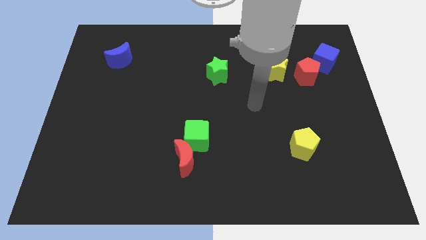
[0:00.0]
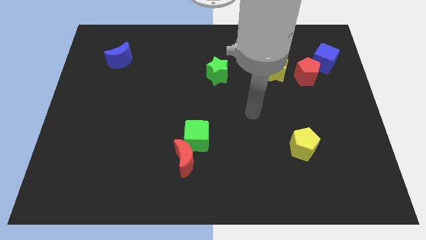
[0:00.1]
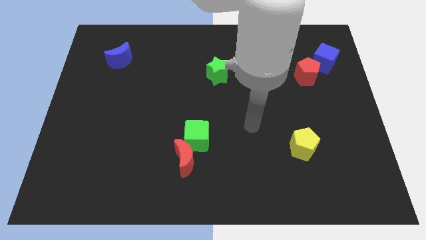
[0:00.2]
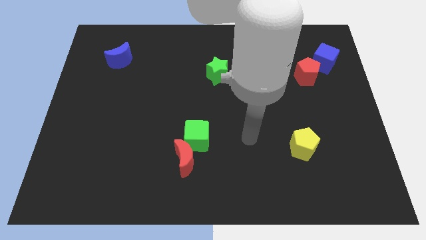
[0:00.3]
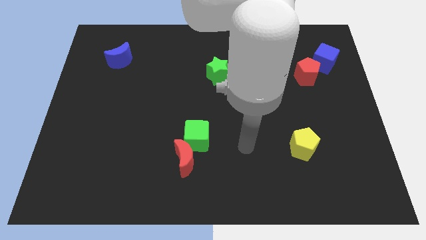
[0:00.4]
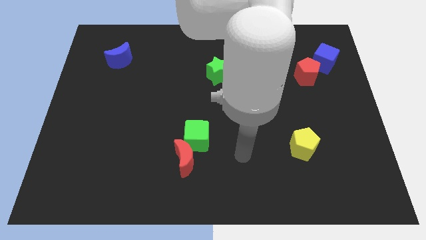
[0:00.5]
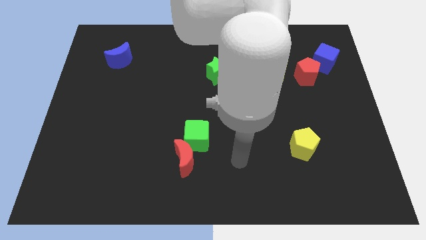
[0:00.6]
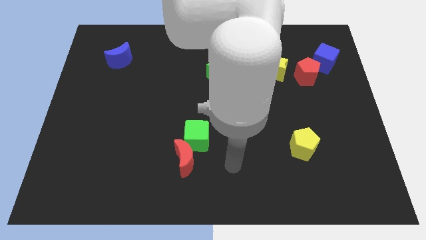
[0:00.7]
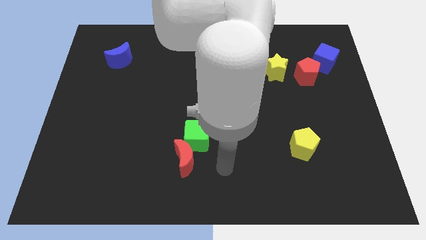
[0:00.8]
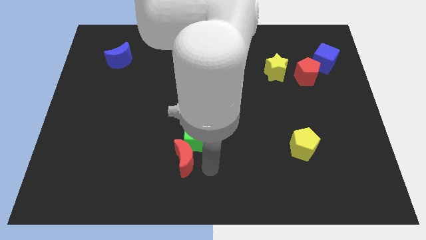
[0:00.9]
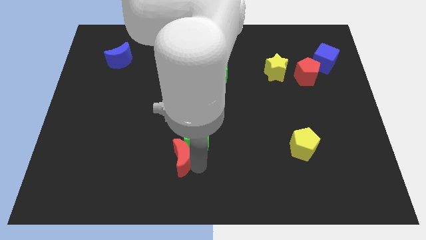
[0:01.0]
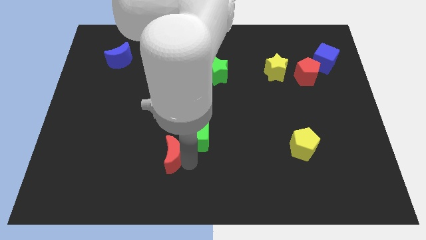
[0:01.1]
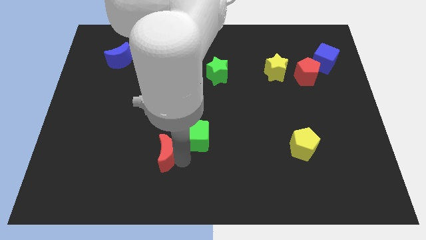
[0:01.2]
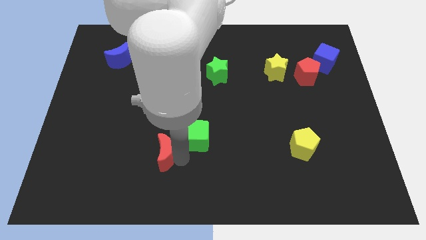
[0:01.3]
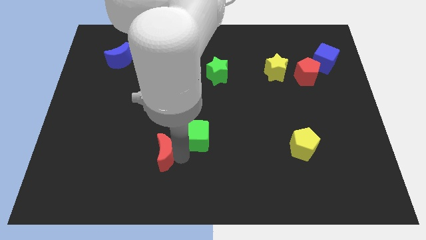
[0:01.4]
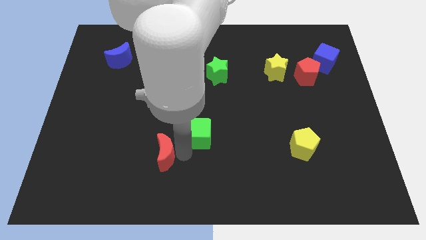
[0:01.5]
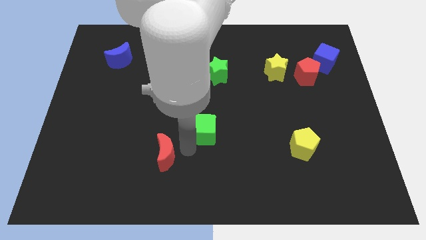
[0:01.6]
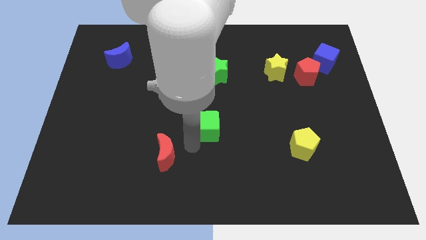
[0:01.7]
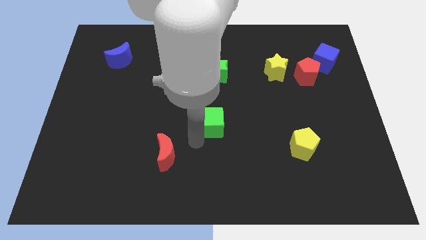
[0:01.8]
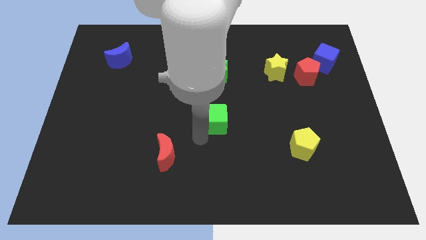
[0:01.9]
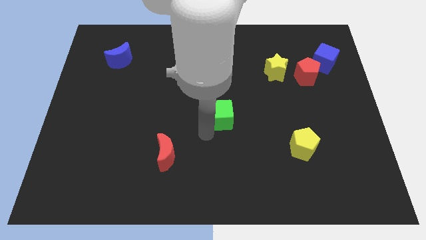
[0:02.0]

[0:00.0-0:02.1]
separate red crescent and green cube

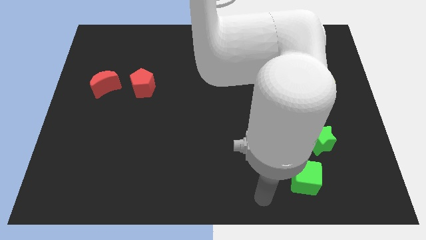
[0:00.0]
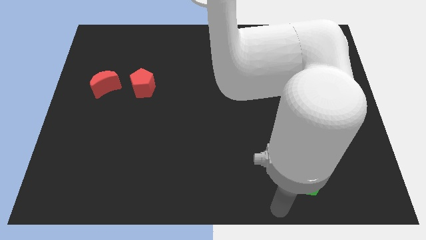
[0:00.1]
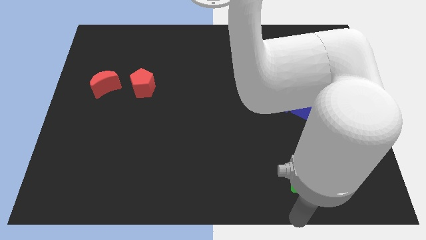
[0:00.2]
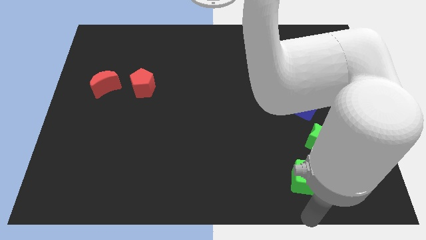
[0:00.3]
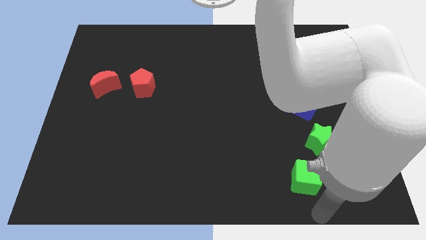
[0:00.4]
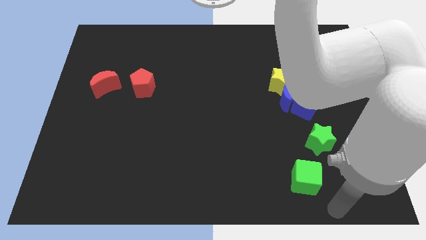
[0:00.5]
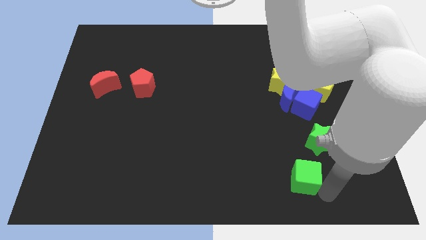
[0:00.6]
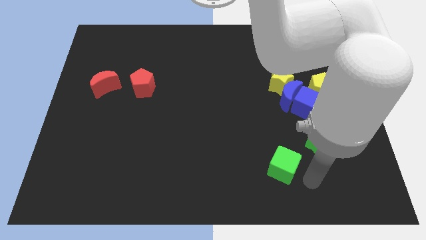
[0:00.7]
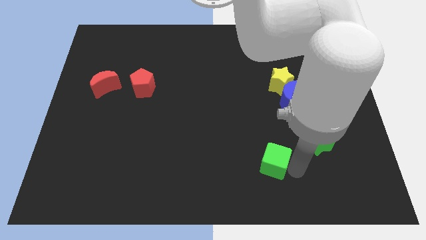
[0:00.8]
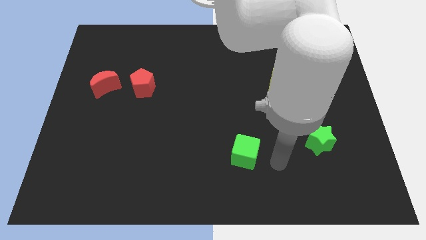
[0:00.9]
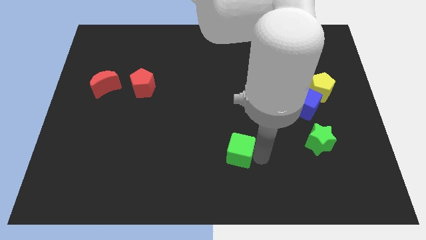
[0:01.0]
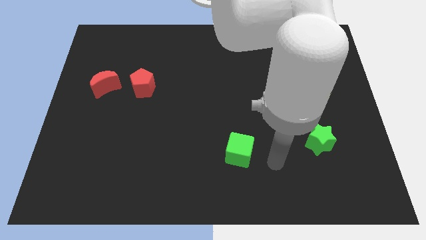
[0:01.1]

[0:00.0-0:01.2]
place the green cube left to the green star

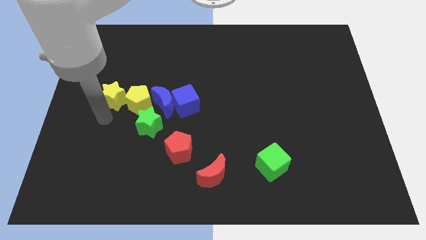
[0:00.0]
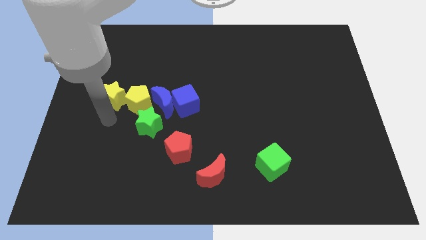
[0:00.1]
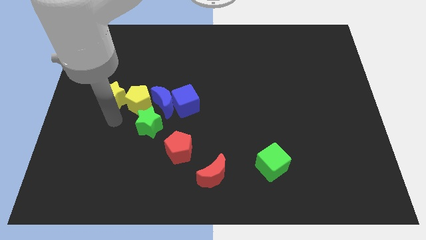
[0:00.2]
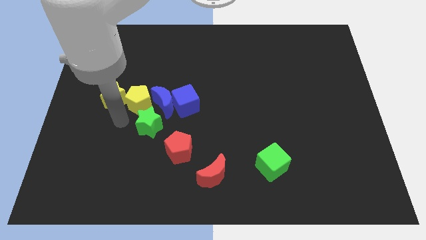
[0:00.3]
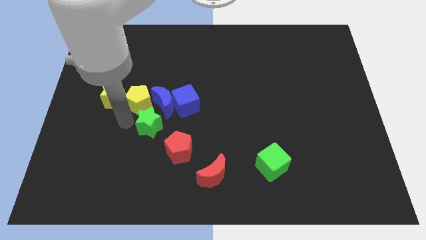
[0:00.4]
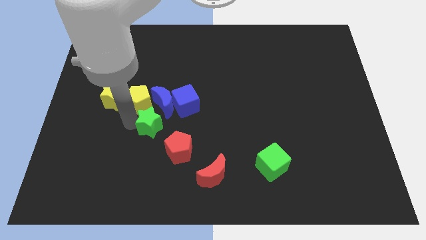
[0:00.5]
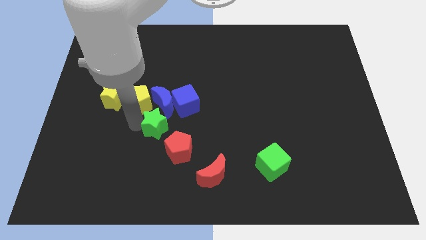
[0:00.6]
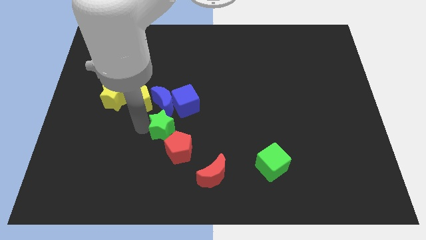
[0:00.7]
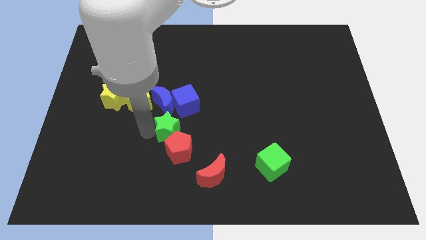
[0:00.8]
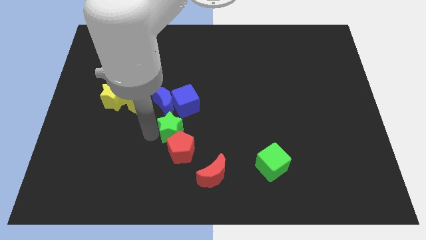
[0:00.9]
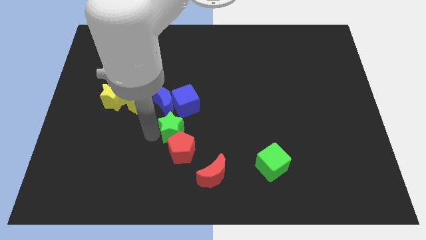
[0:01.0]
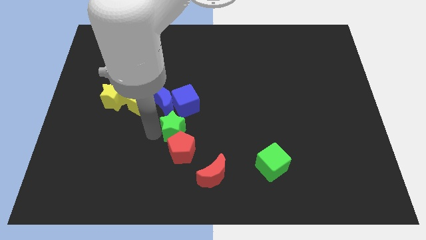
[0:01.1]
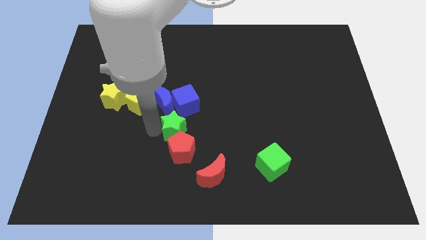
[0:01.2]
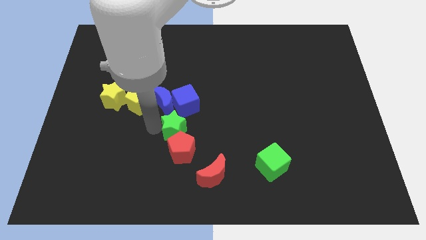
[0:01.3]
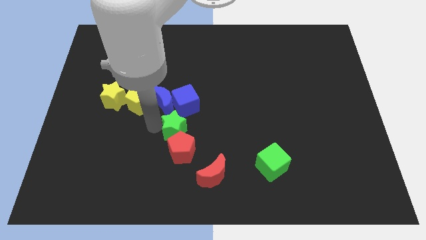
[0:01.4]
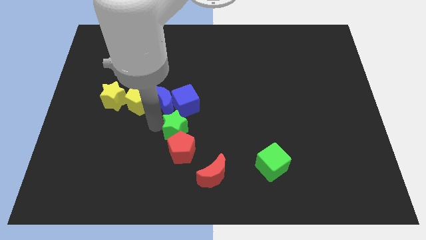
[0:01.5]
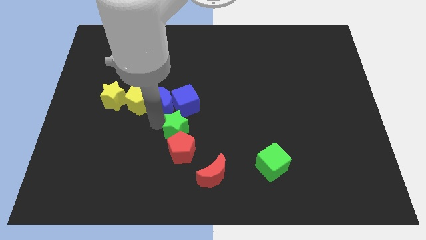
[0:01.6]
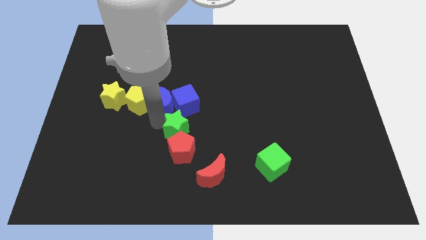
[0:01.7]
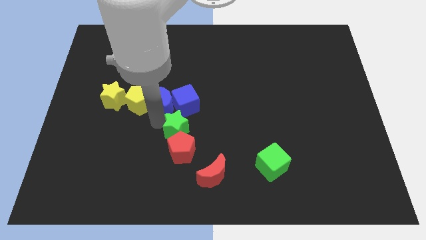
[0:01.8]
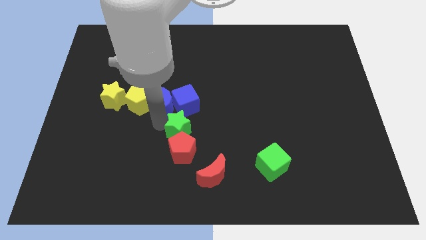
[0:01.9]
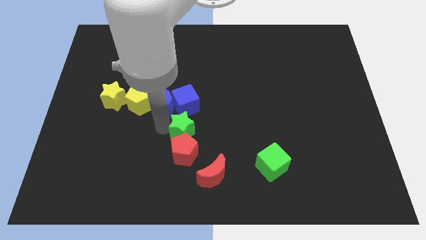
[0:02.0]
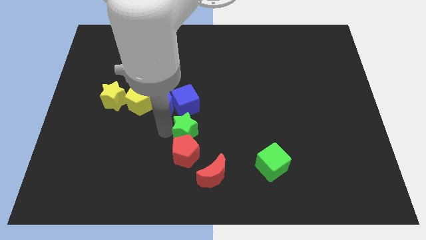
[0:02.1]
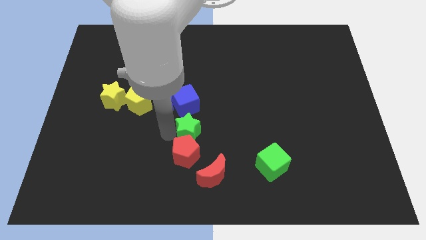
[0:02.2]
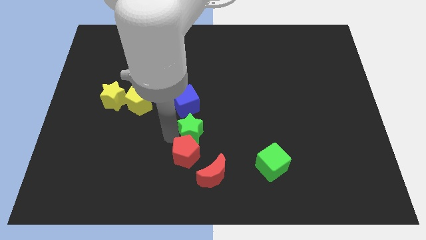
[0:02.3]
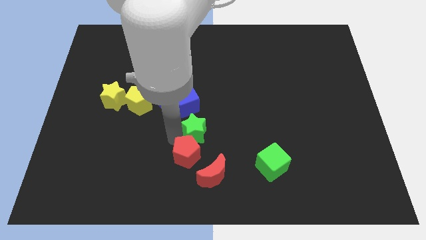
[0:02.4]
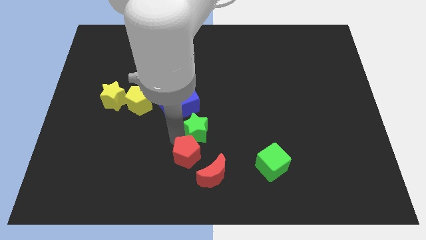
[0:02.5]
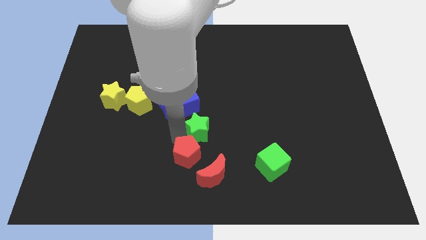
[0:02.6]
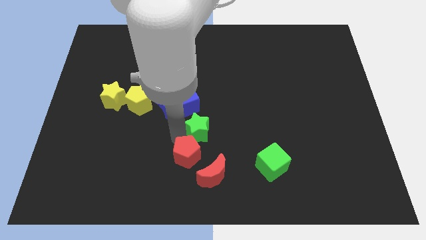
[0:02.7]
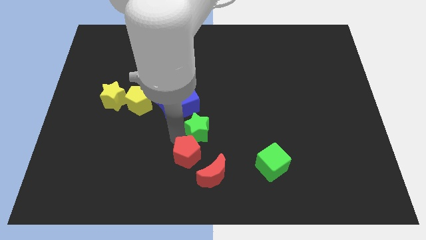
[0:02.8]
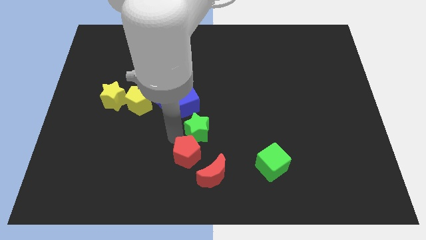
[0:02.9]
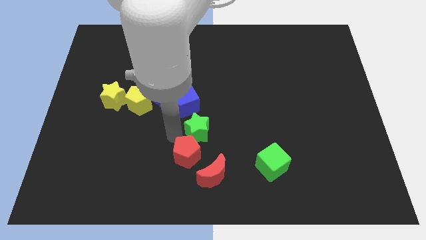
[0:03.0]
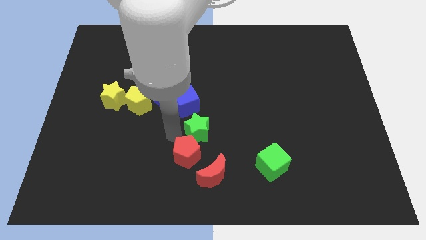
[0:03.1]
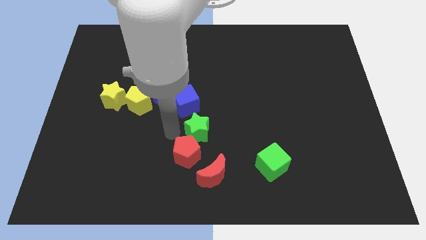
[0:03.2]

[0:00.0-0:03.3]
separate the green star between blue cube and red pentagon

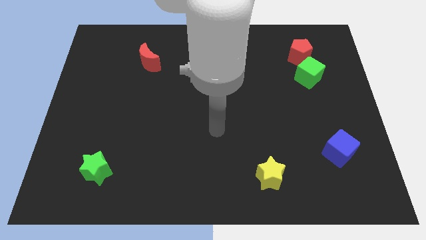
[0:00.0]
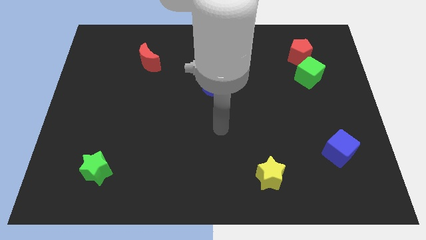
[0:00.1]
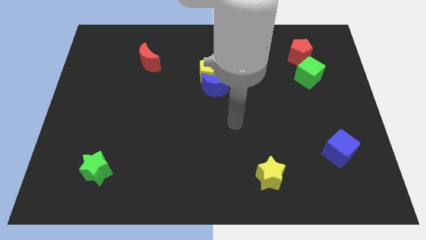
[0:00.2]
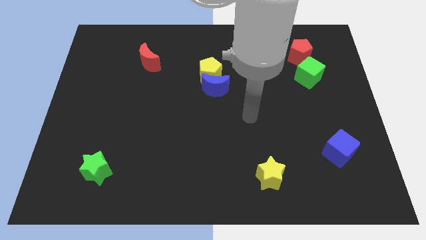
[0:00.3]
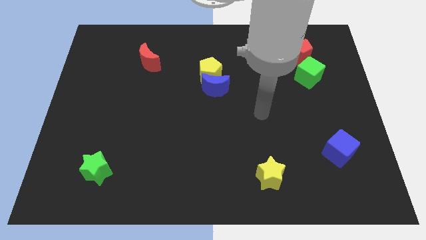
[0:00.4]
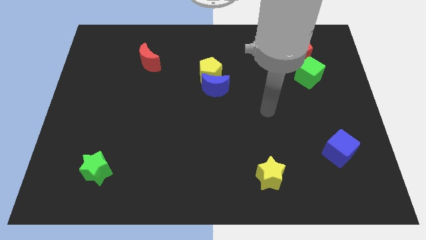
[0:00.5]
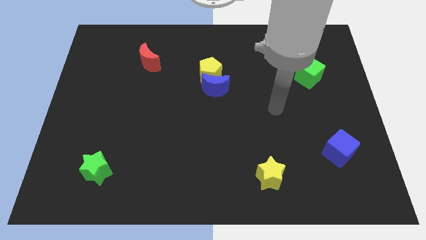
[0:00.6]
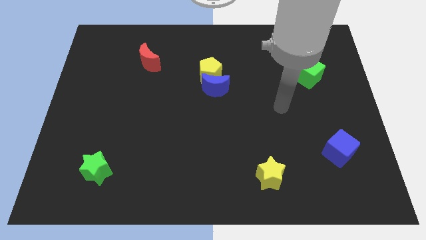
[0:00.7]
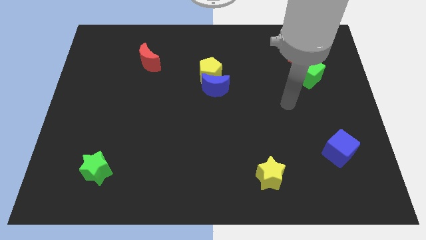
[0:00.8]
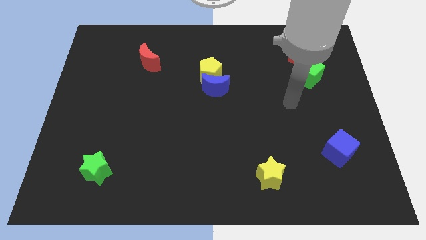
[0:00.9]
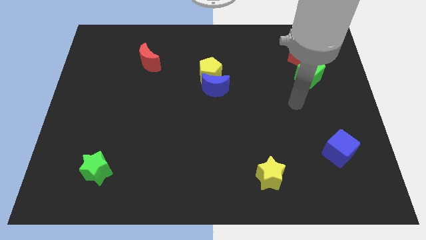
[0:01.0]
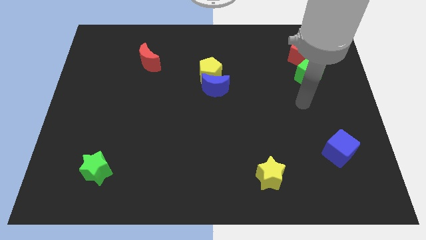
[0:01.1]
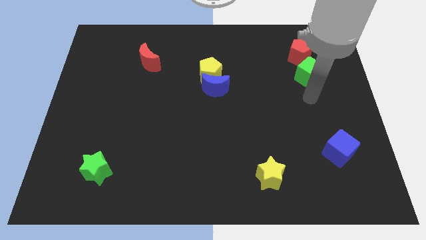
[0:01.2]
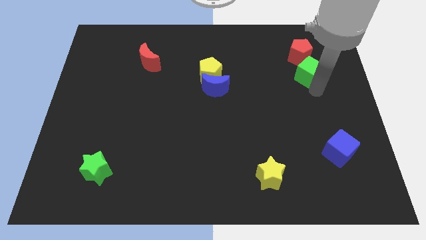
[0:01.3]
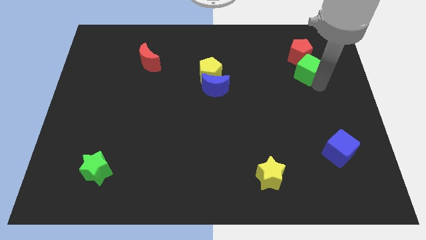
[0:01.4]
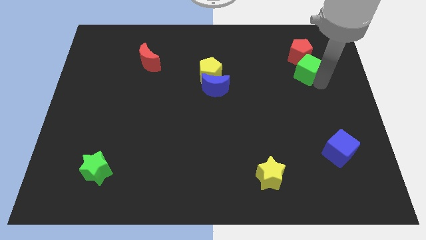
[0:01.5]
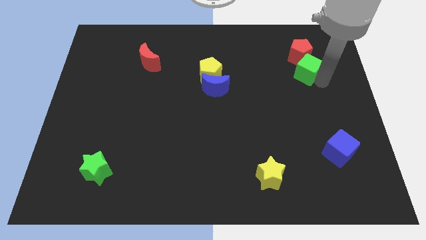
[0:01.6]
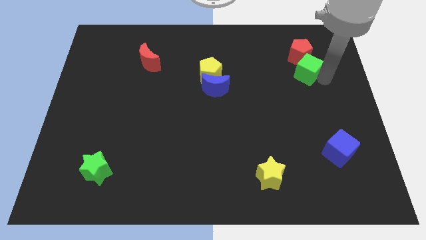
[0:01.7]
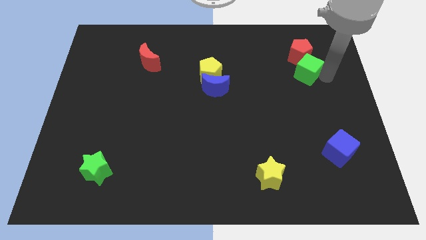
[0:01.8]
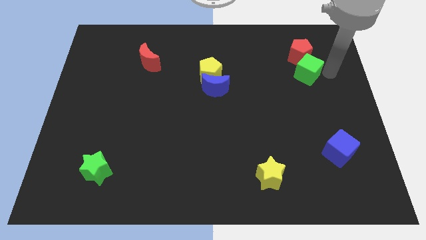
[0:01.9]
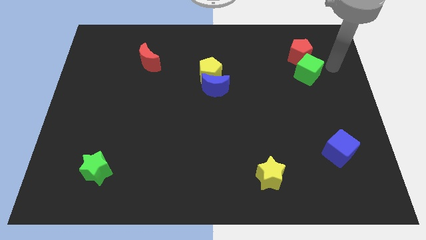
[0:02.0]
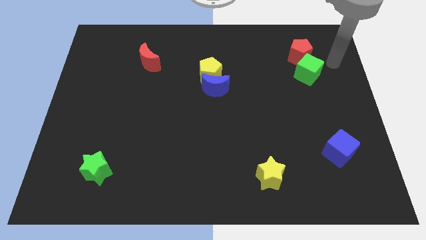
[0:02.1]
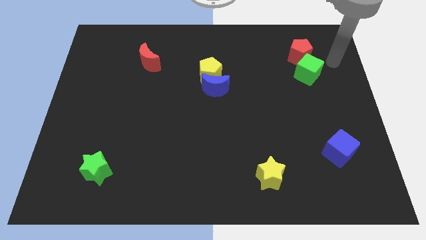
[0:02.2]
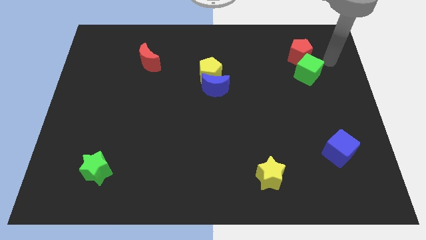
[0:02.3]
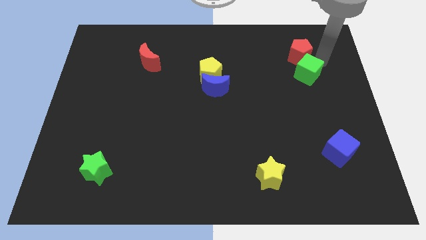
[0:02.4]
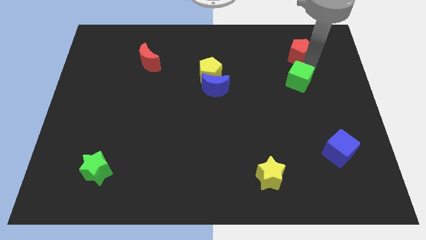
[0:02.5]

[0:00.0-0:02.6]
move your arm to the top of the green cube
